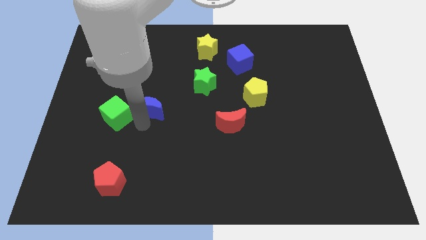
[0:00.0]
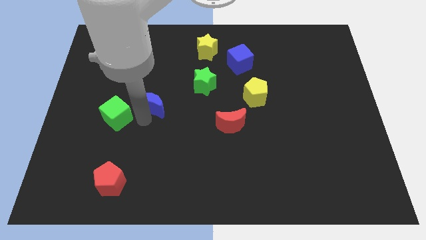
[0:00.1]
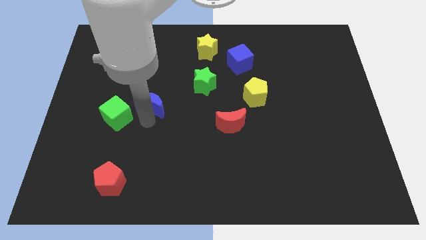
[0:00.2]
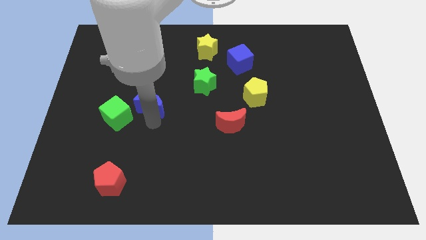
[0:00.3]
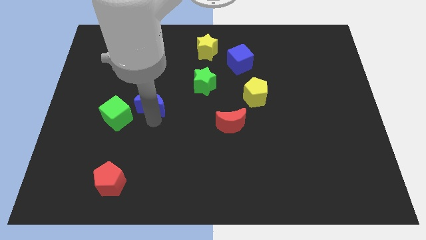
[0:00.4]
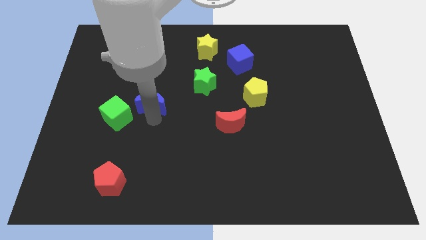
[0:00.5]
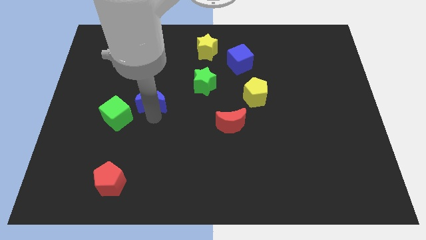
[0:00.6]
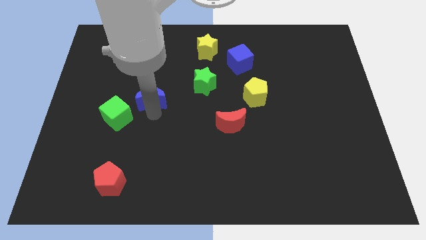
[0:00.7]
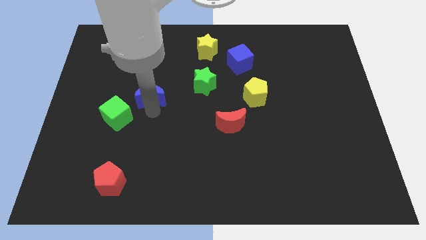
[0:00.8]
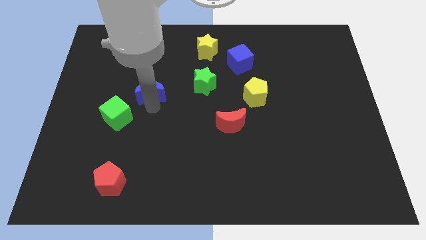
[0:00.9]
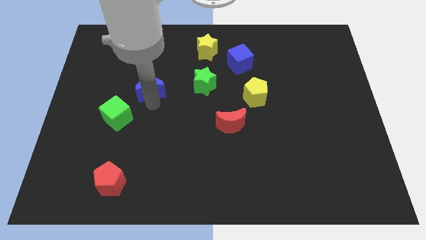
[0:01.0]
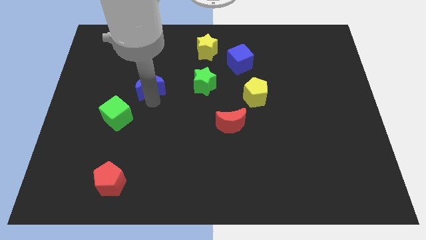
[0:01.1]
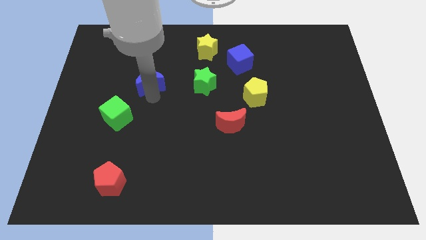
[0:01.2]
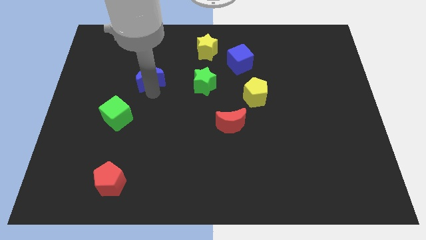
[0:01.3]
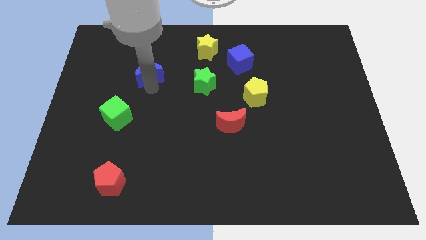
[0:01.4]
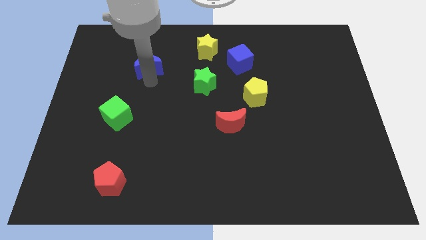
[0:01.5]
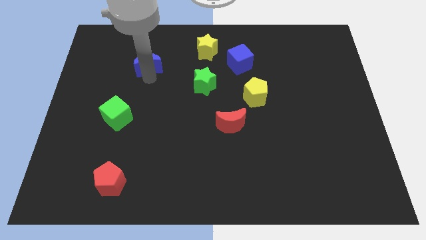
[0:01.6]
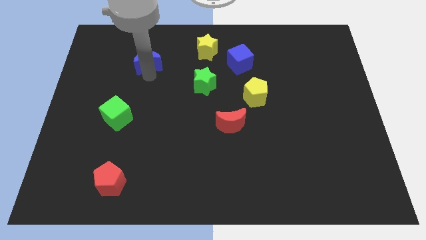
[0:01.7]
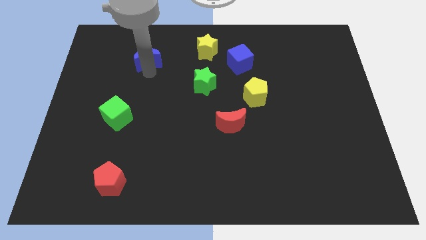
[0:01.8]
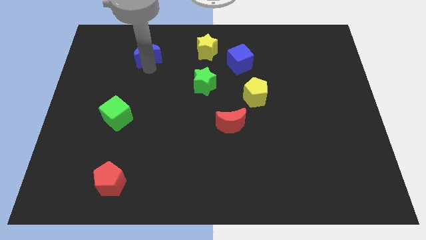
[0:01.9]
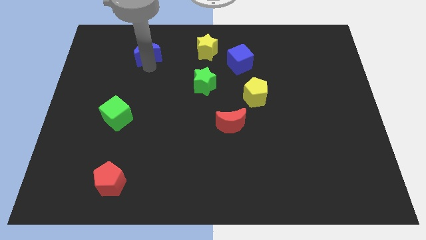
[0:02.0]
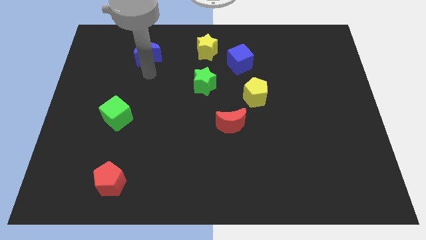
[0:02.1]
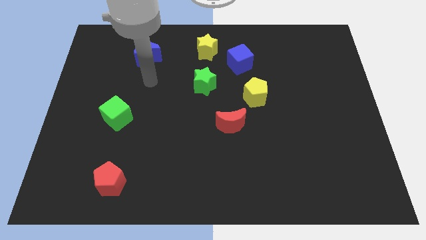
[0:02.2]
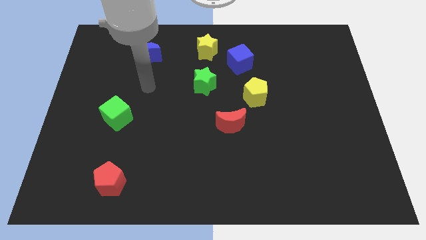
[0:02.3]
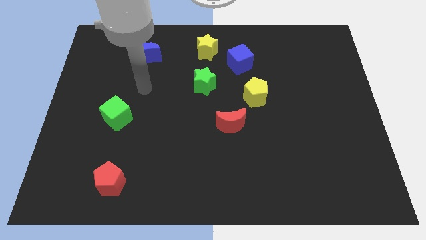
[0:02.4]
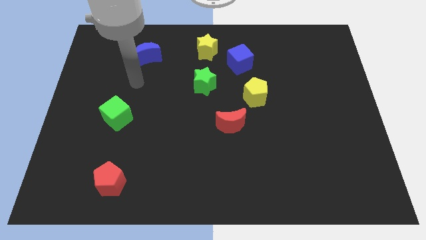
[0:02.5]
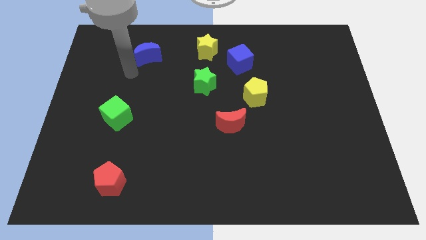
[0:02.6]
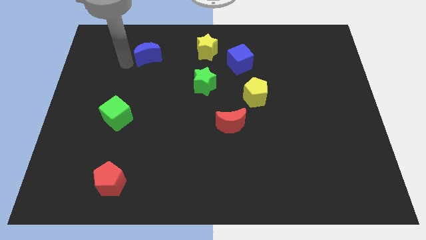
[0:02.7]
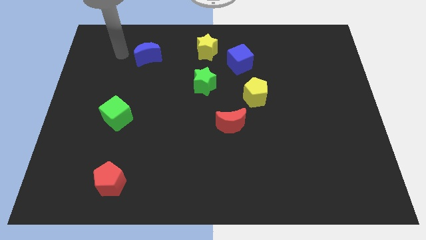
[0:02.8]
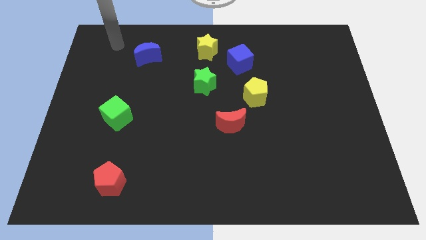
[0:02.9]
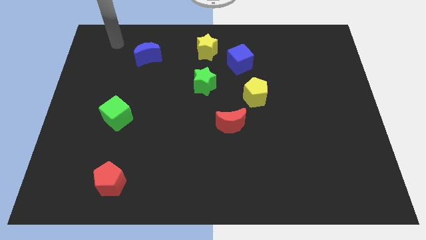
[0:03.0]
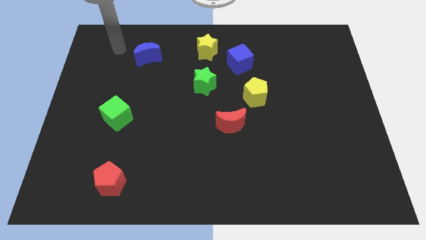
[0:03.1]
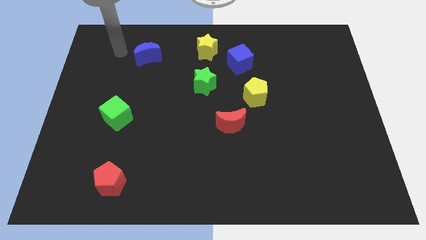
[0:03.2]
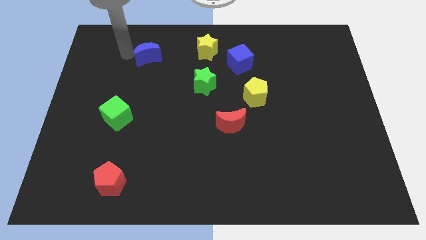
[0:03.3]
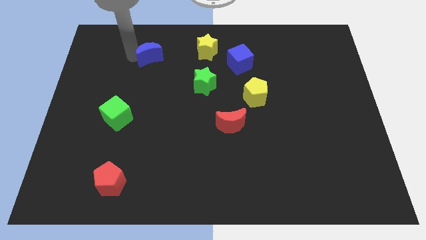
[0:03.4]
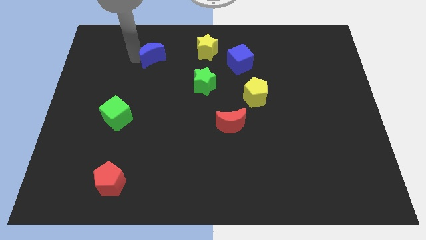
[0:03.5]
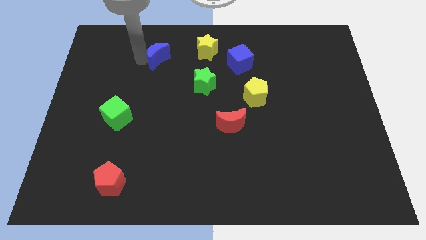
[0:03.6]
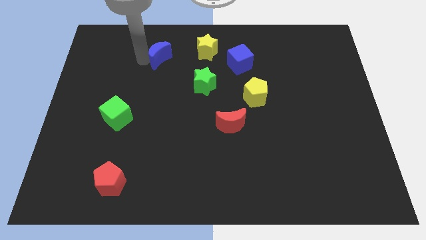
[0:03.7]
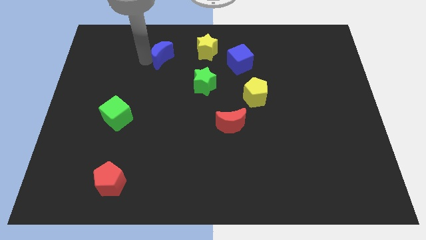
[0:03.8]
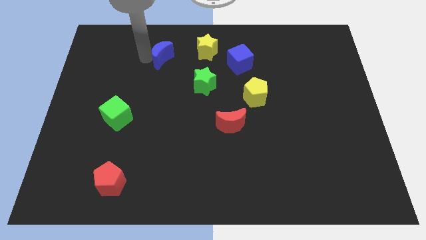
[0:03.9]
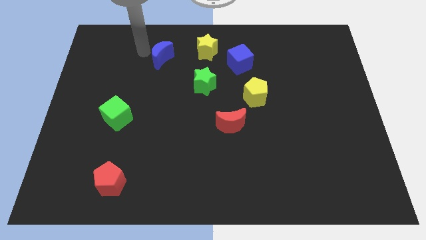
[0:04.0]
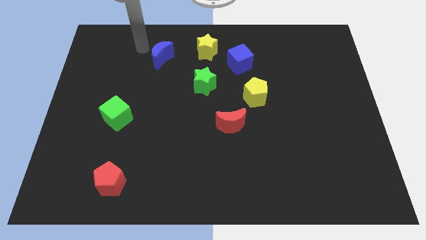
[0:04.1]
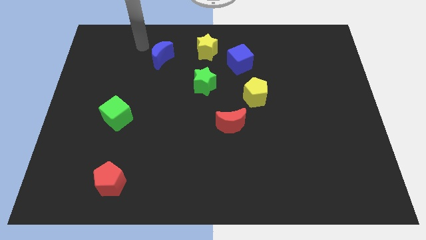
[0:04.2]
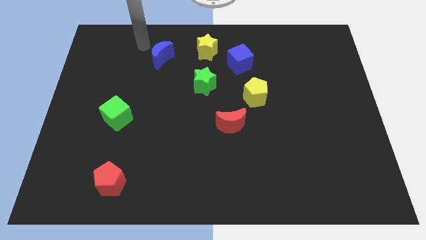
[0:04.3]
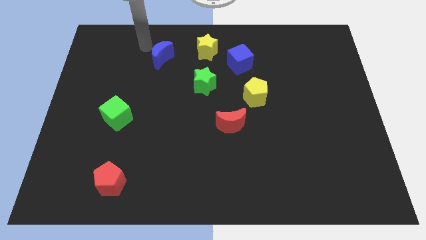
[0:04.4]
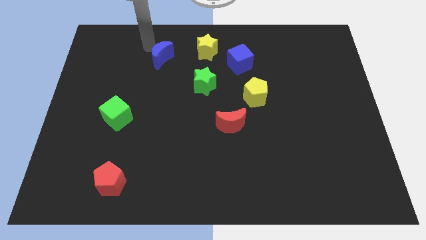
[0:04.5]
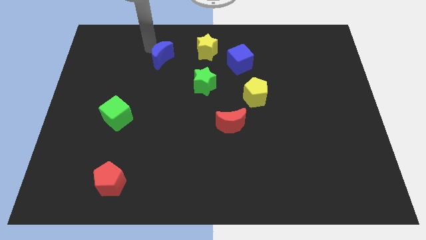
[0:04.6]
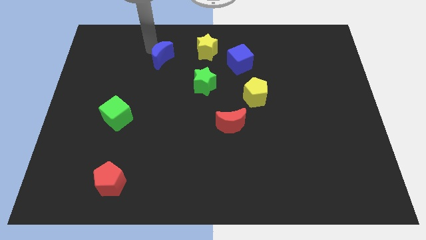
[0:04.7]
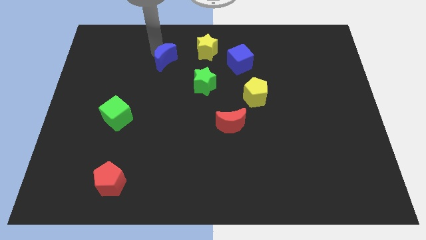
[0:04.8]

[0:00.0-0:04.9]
move blue crescent towards top

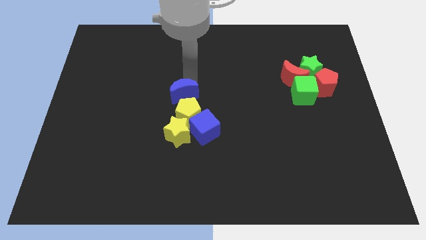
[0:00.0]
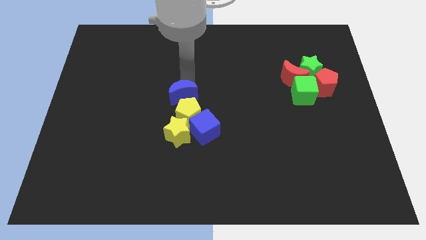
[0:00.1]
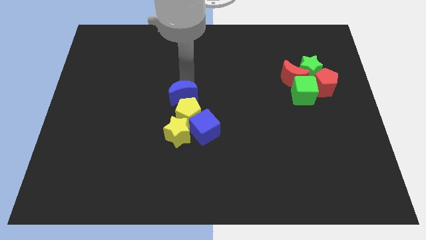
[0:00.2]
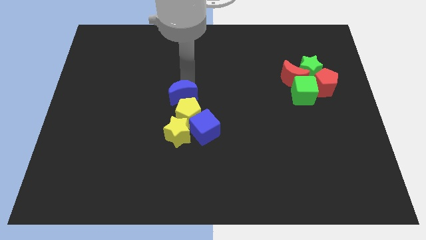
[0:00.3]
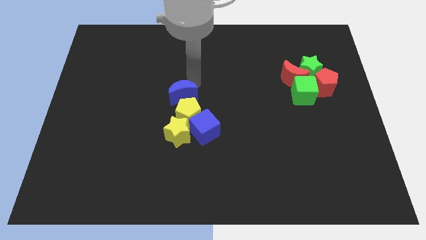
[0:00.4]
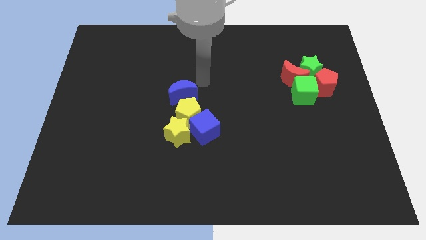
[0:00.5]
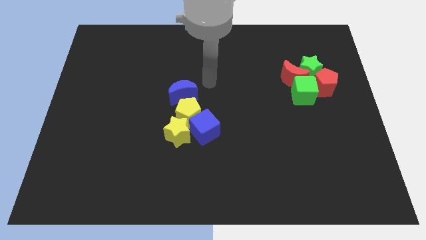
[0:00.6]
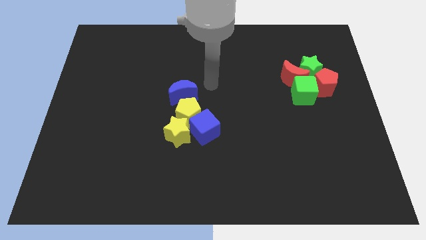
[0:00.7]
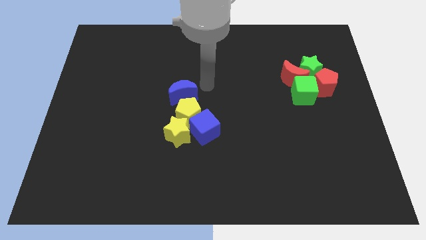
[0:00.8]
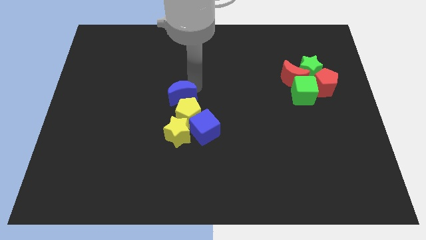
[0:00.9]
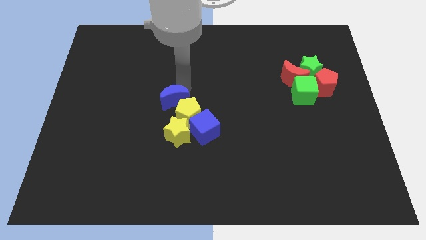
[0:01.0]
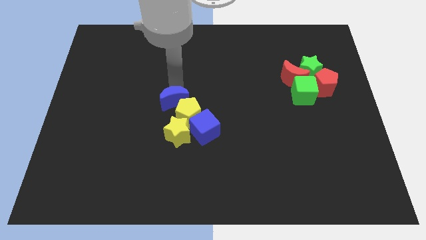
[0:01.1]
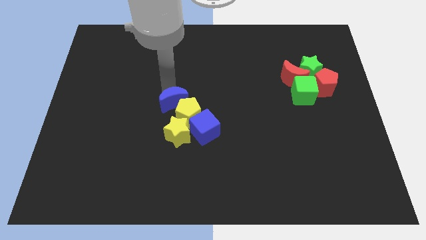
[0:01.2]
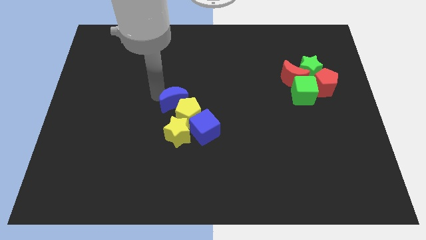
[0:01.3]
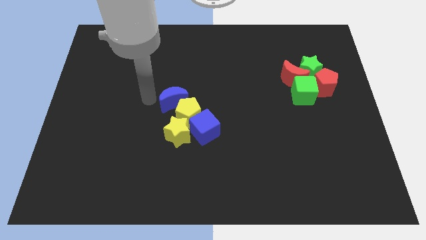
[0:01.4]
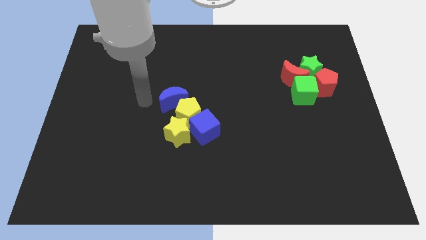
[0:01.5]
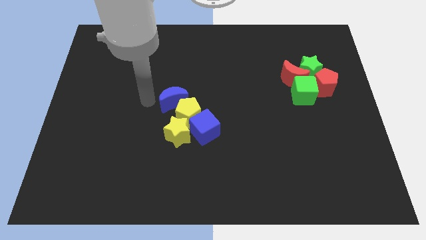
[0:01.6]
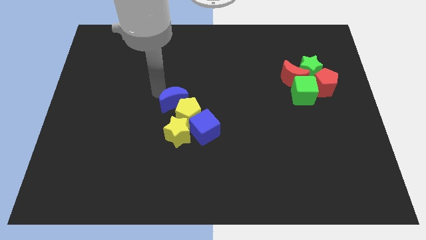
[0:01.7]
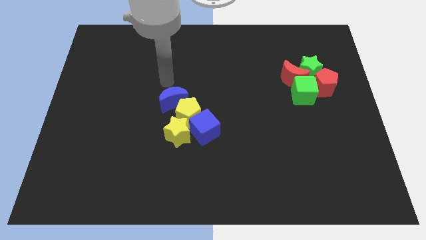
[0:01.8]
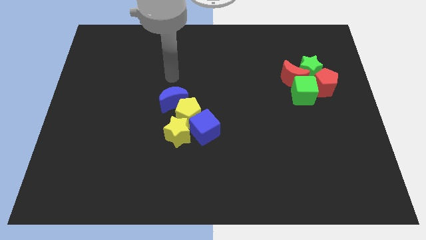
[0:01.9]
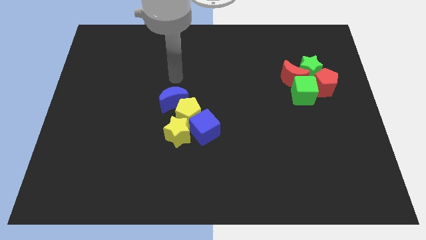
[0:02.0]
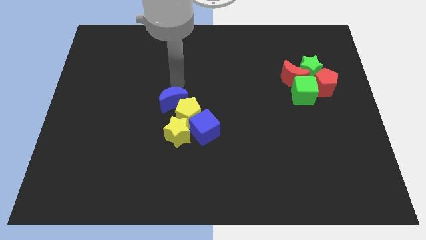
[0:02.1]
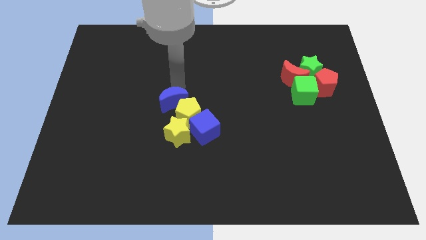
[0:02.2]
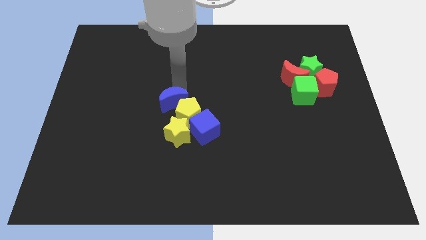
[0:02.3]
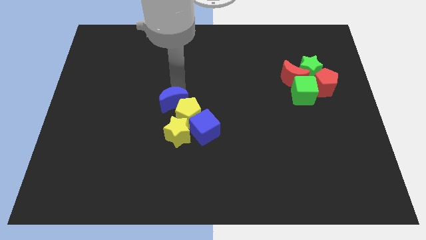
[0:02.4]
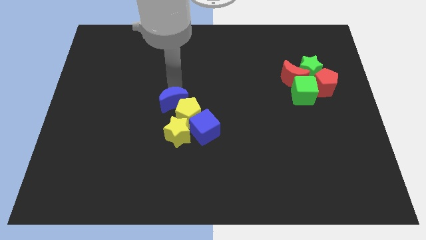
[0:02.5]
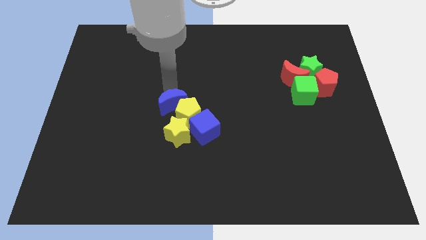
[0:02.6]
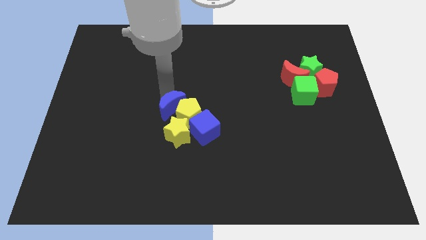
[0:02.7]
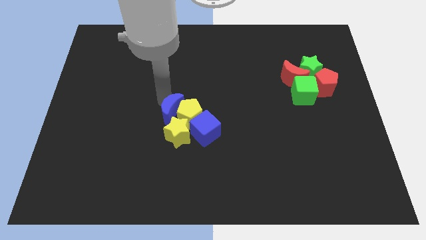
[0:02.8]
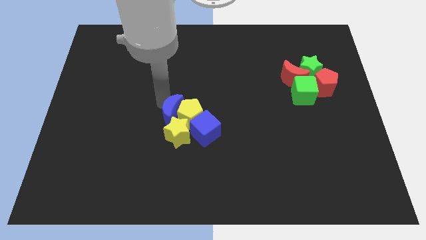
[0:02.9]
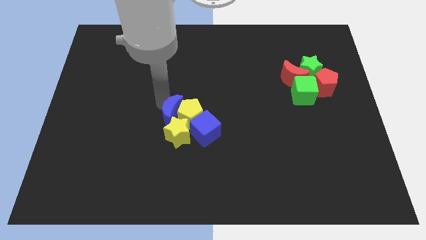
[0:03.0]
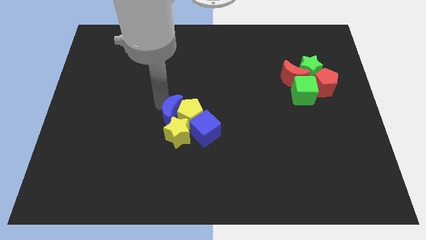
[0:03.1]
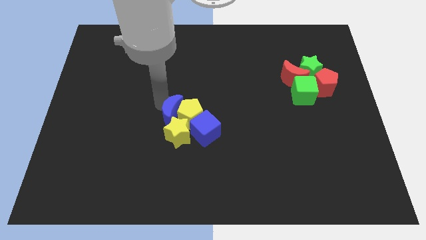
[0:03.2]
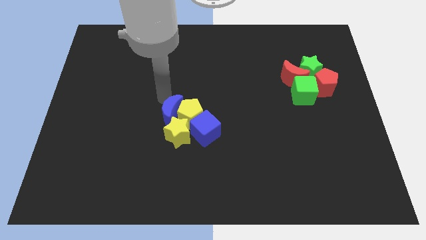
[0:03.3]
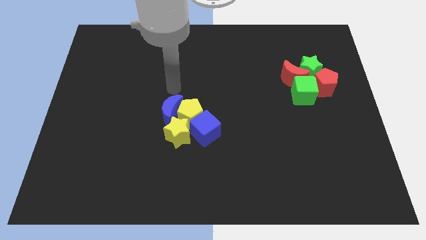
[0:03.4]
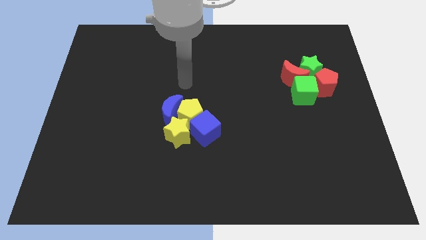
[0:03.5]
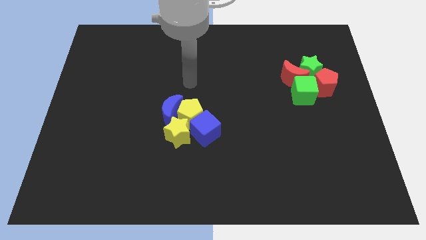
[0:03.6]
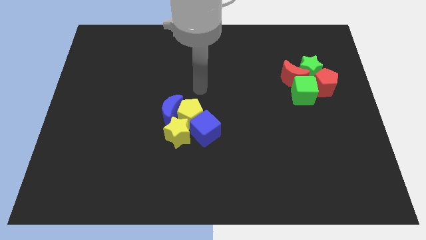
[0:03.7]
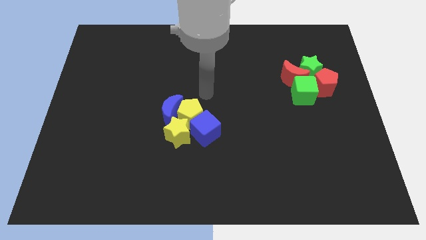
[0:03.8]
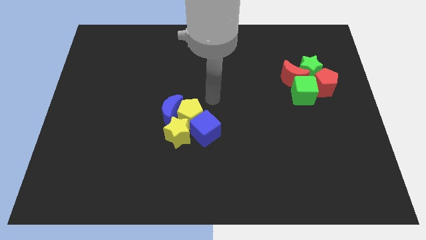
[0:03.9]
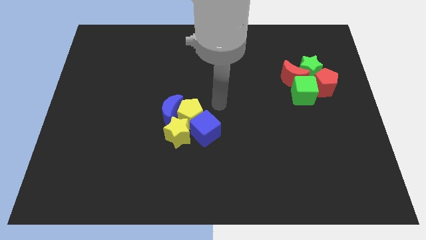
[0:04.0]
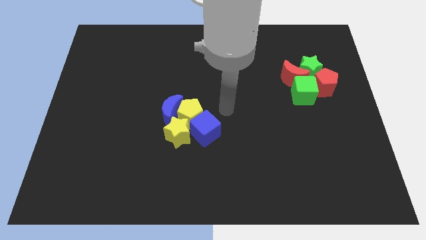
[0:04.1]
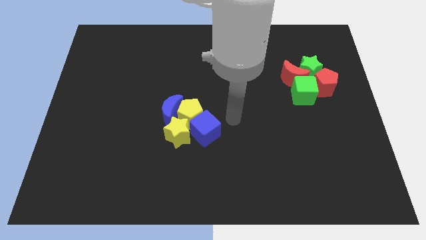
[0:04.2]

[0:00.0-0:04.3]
put the blue moon towards the left side of the yellow pentagon
